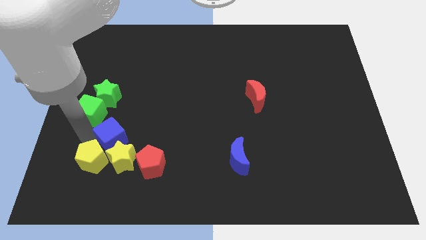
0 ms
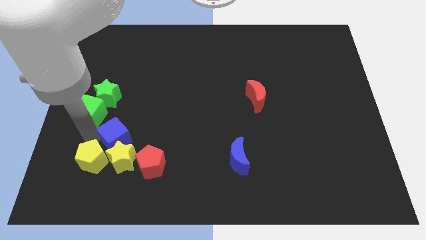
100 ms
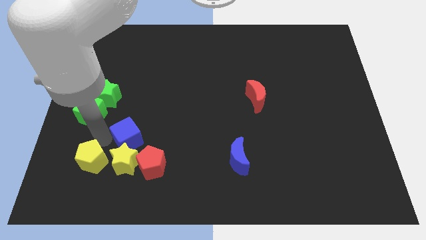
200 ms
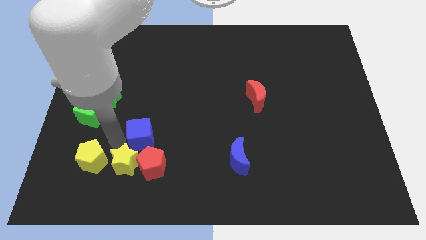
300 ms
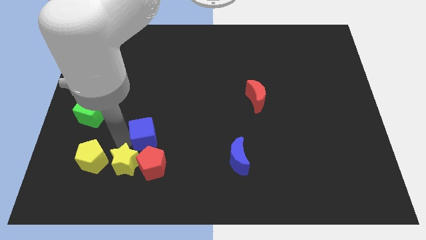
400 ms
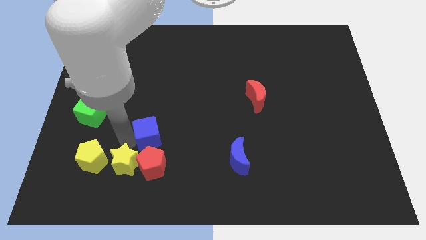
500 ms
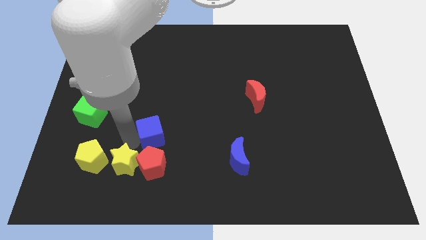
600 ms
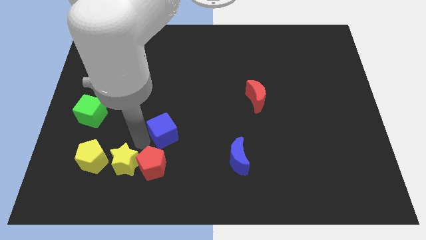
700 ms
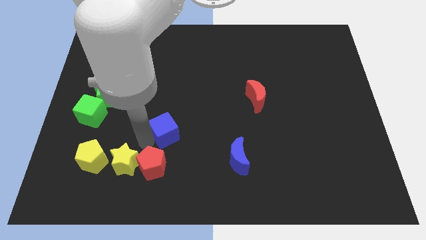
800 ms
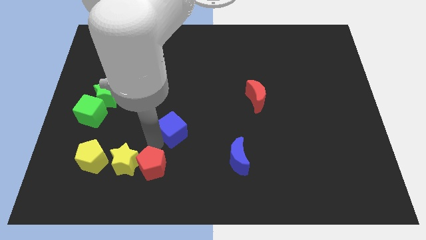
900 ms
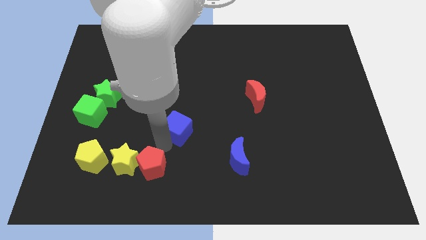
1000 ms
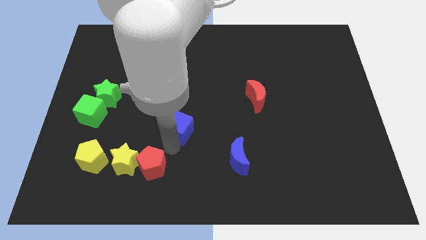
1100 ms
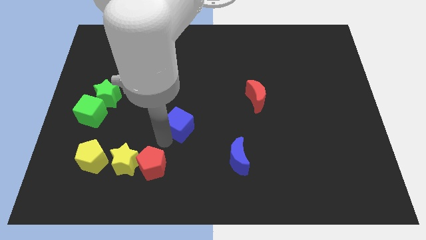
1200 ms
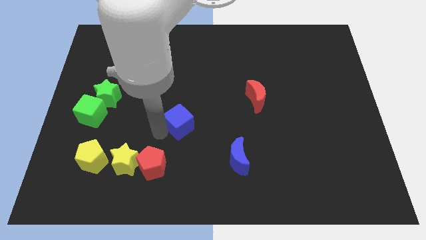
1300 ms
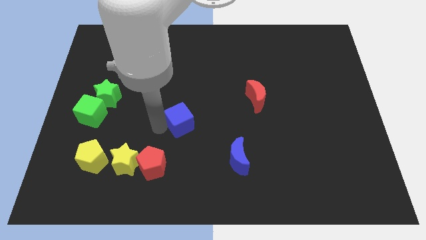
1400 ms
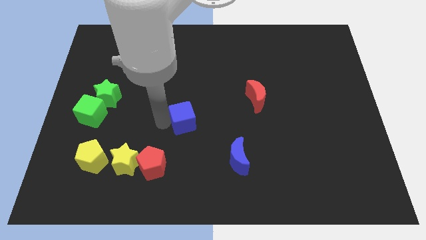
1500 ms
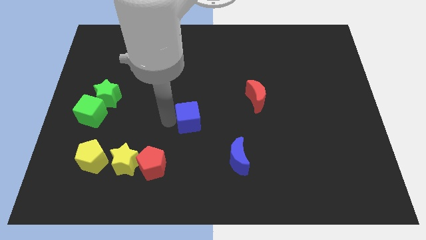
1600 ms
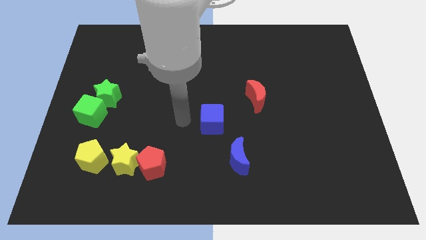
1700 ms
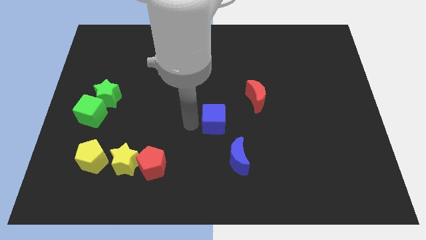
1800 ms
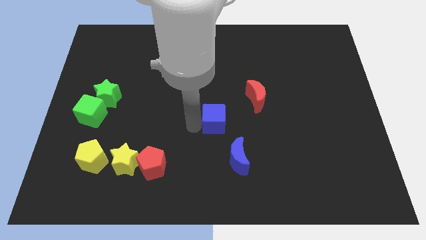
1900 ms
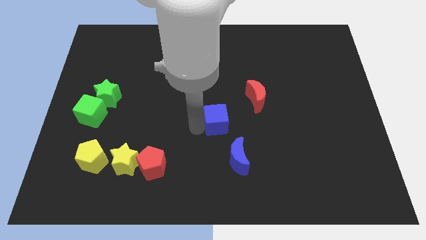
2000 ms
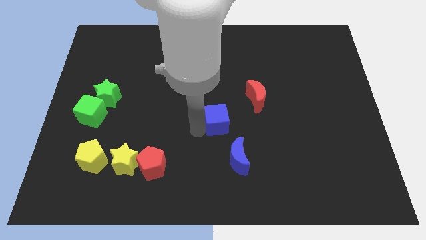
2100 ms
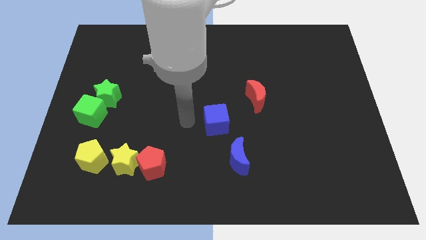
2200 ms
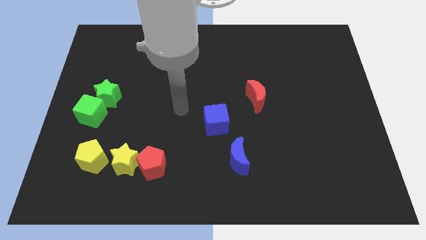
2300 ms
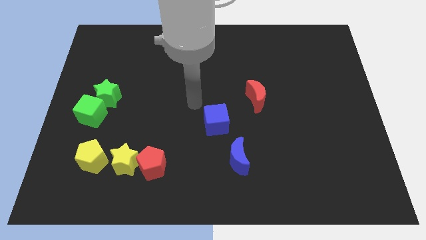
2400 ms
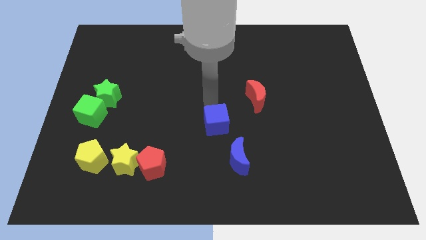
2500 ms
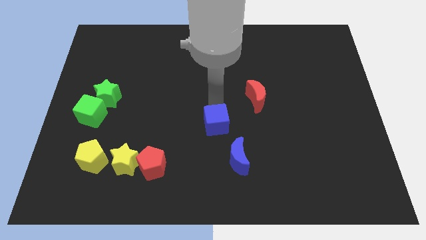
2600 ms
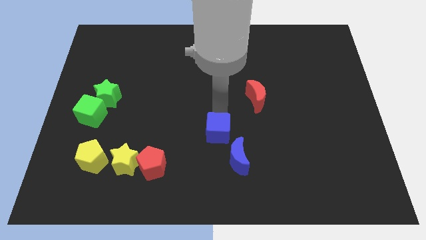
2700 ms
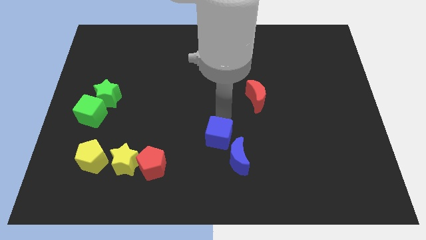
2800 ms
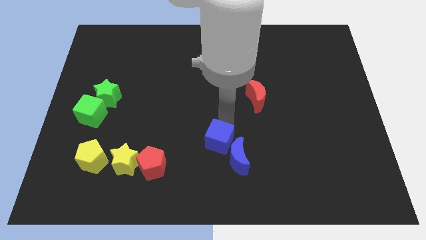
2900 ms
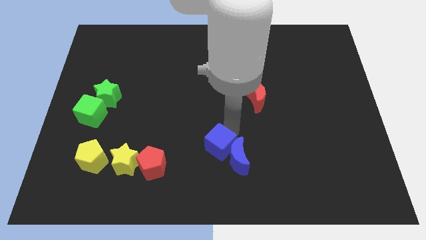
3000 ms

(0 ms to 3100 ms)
drag the blue cube into the top left side of the blue crescent

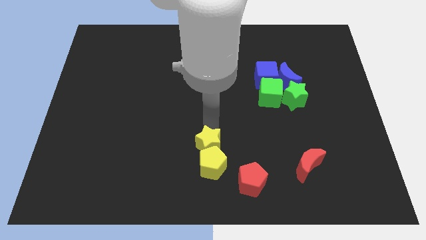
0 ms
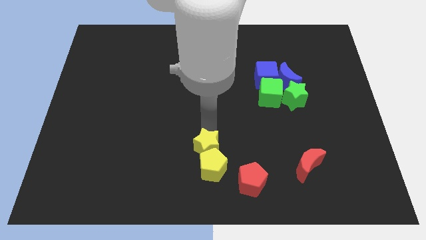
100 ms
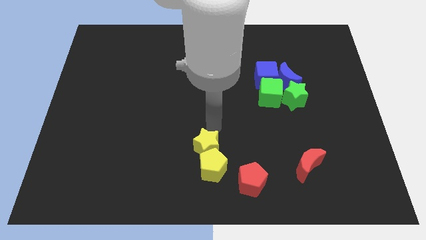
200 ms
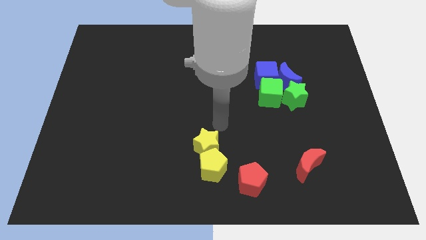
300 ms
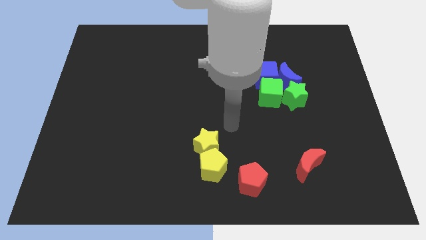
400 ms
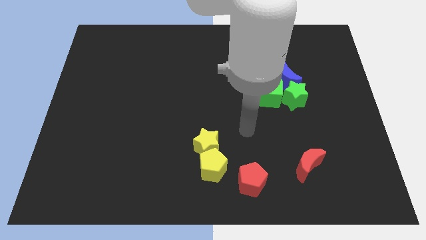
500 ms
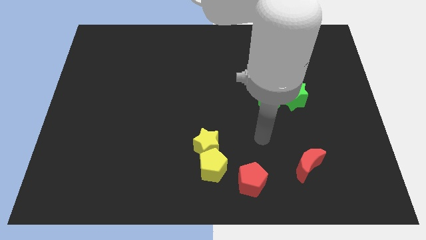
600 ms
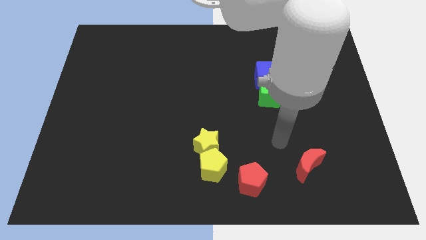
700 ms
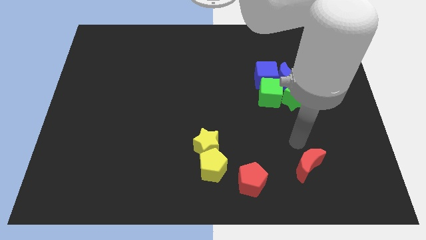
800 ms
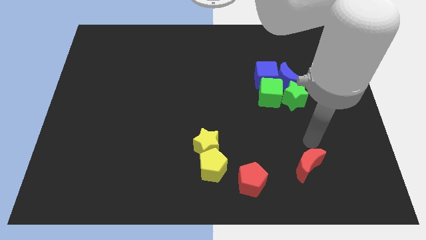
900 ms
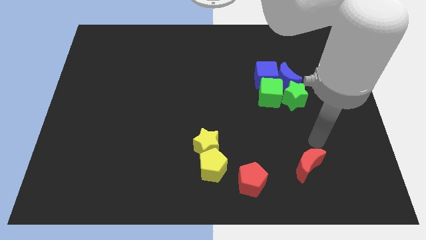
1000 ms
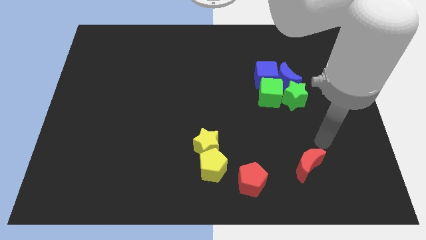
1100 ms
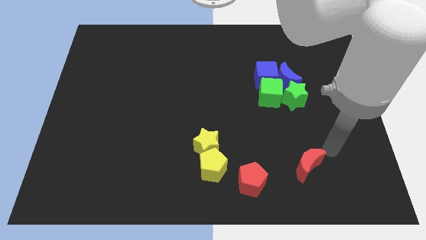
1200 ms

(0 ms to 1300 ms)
place your arm on top right of red crescent

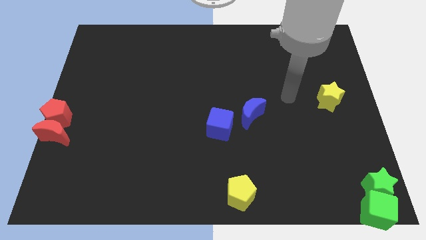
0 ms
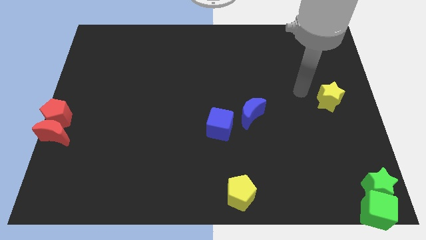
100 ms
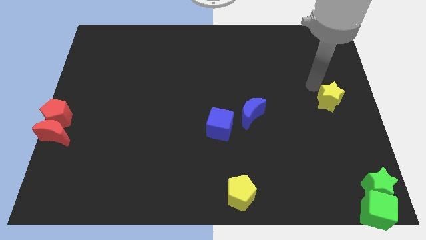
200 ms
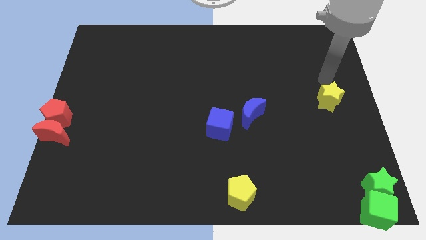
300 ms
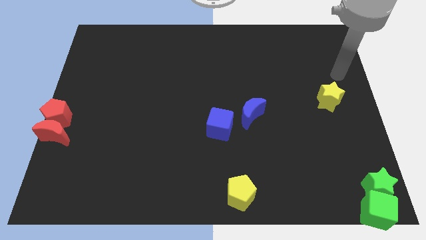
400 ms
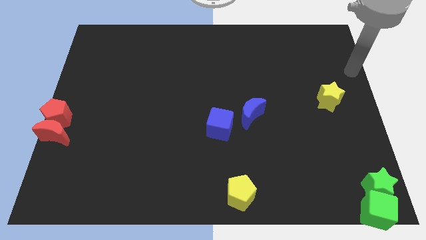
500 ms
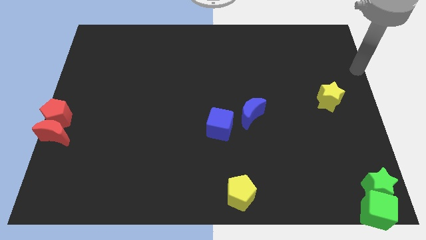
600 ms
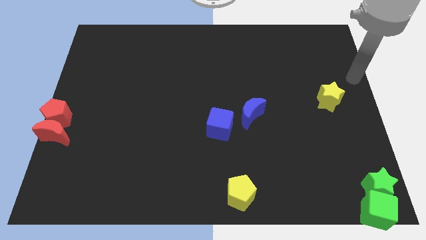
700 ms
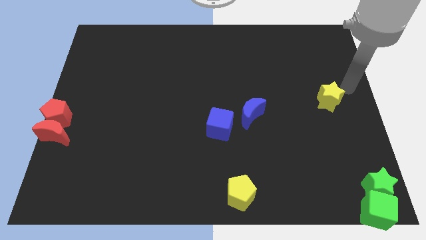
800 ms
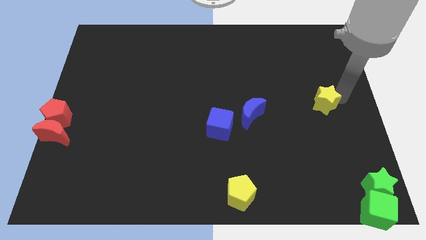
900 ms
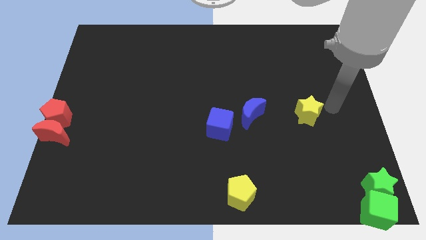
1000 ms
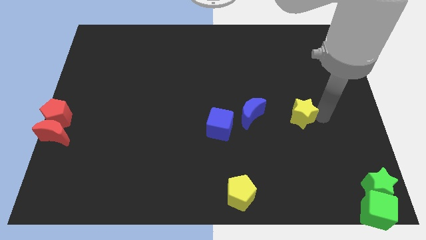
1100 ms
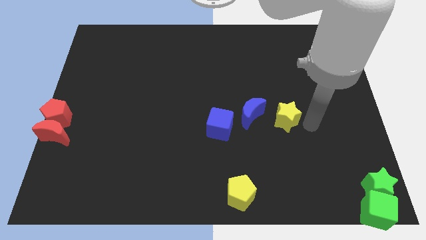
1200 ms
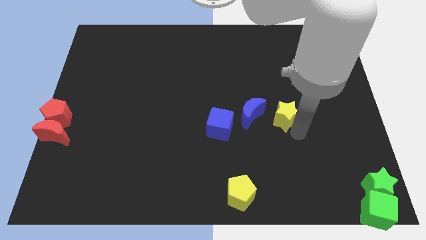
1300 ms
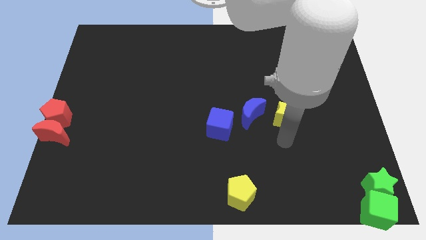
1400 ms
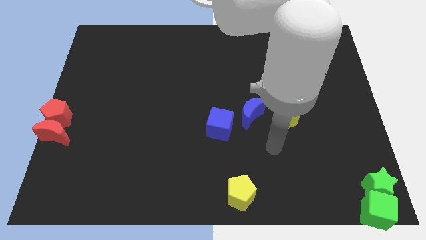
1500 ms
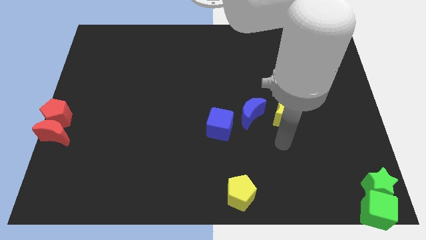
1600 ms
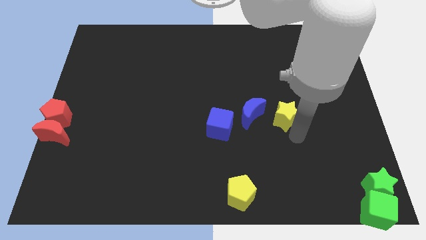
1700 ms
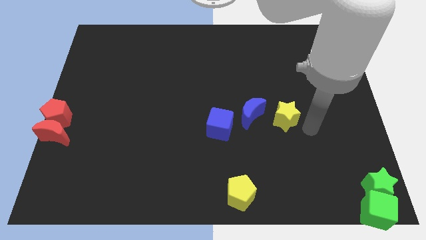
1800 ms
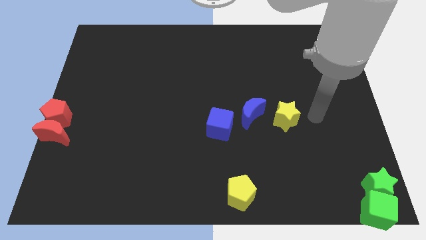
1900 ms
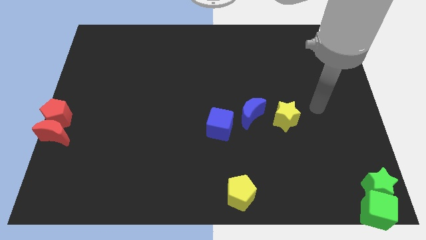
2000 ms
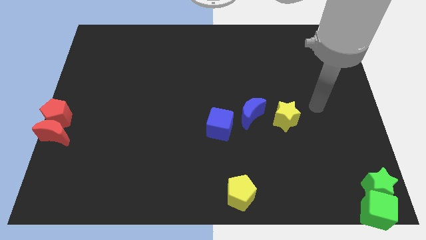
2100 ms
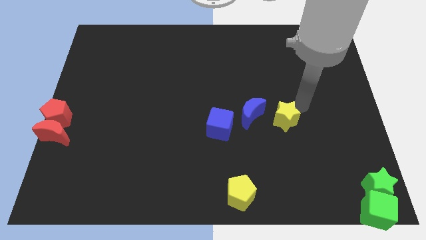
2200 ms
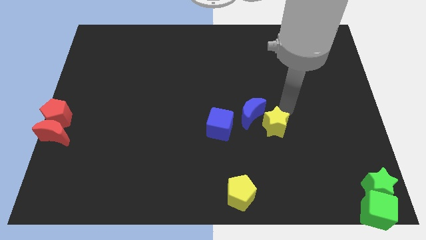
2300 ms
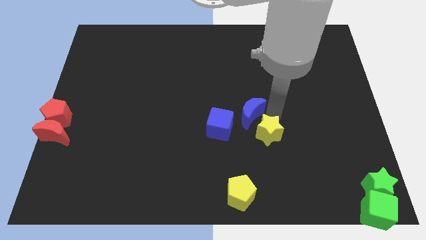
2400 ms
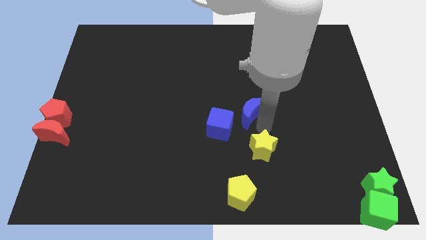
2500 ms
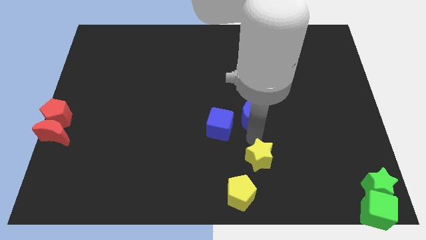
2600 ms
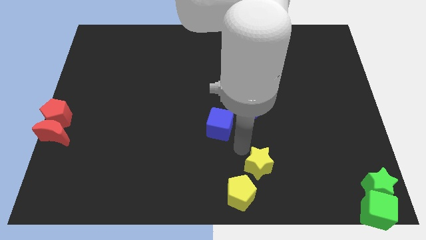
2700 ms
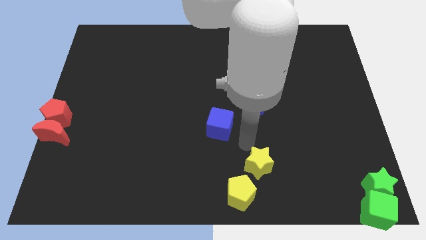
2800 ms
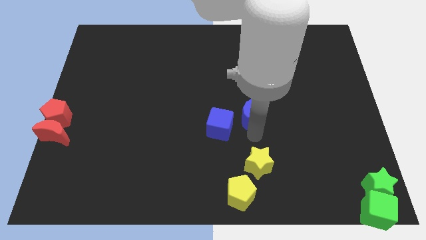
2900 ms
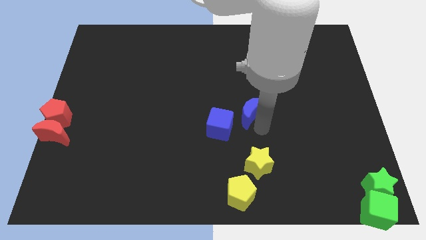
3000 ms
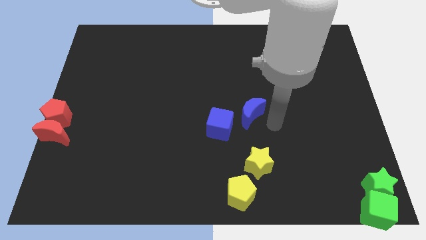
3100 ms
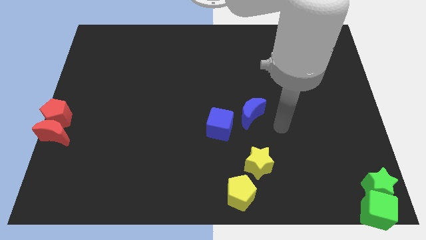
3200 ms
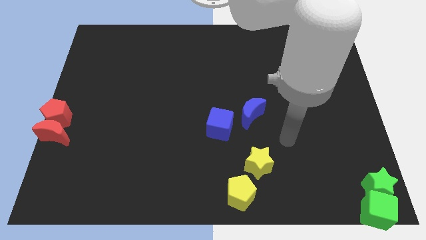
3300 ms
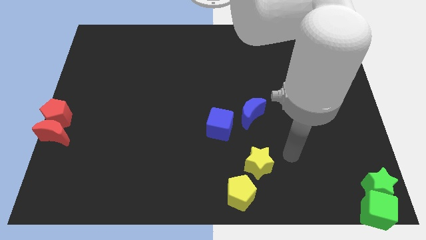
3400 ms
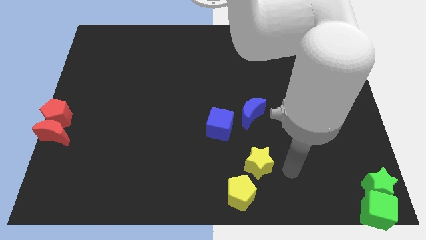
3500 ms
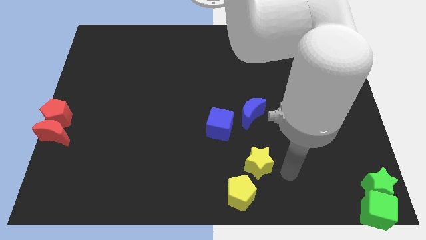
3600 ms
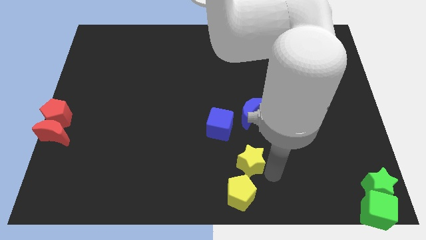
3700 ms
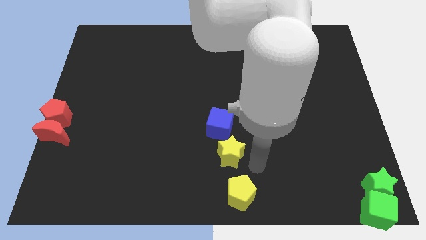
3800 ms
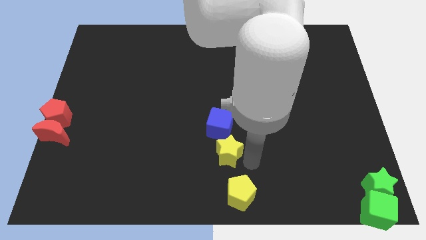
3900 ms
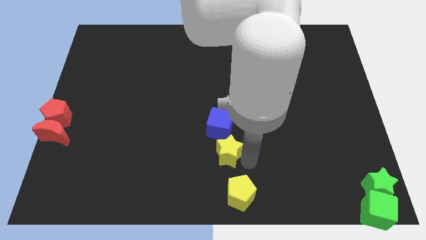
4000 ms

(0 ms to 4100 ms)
move yellow star towards yellow pentagon
